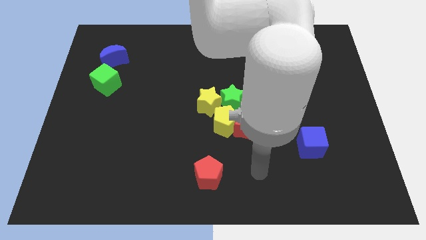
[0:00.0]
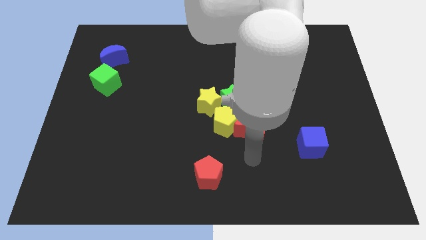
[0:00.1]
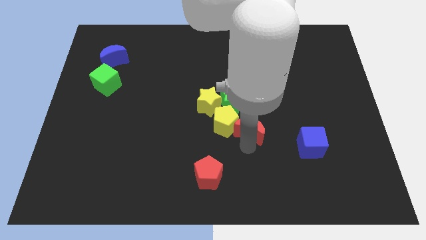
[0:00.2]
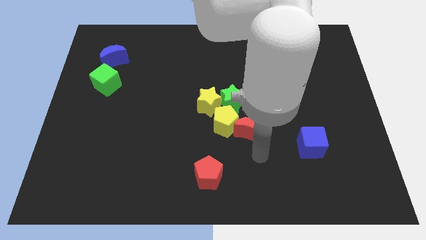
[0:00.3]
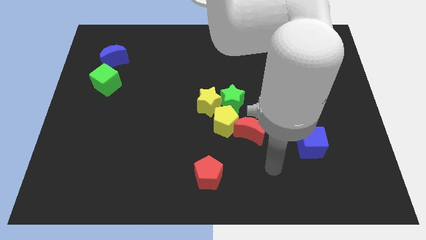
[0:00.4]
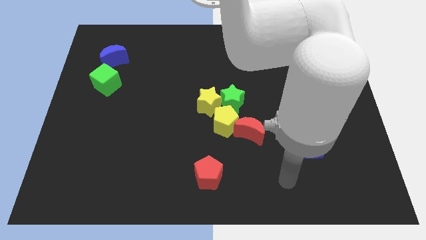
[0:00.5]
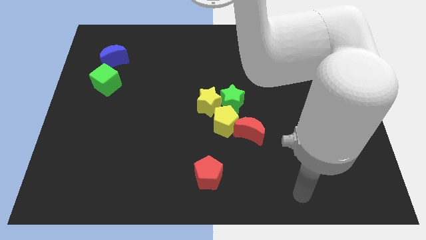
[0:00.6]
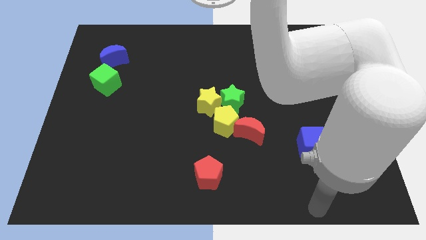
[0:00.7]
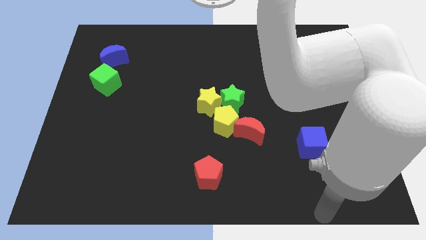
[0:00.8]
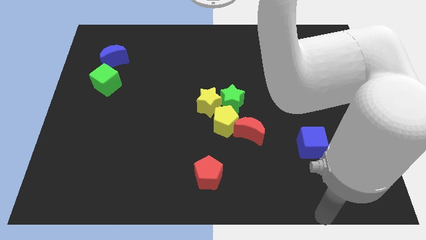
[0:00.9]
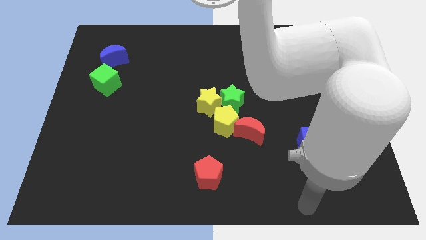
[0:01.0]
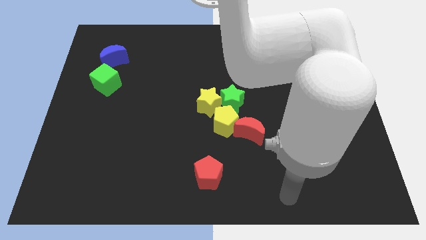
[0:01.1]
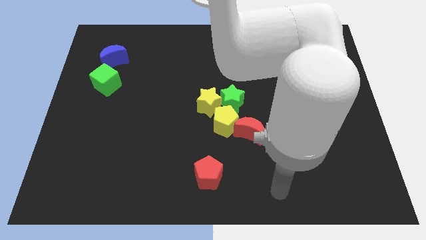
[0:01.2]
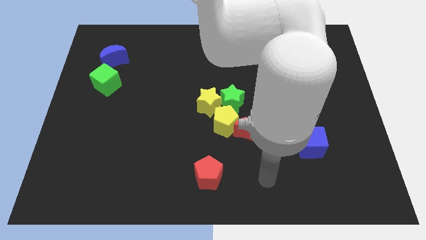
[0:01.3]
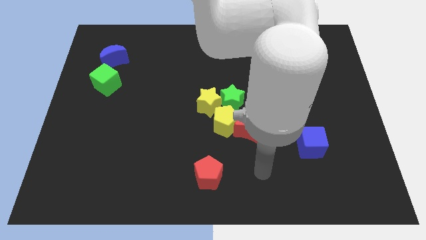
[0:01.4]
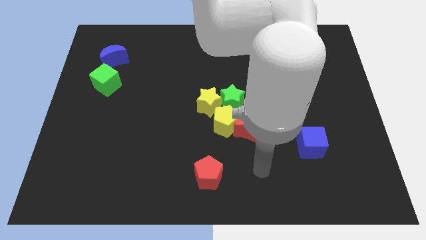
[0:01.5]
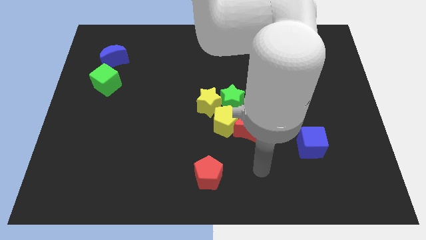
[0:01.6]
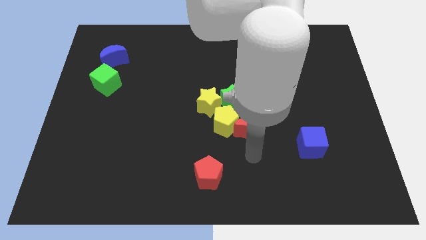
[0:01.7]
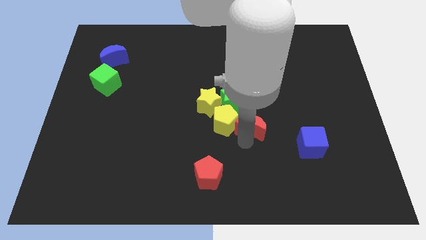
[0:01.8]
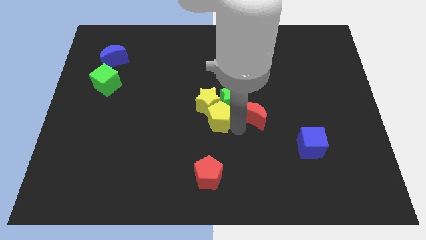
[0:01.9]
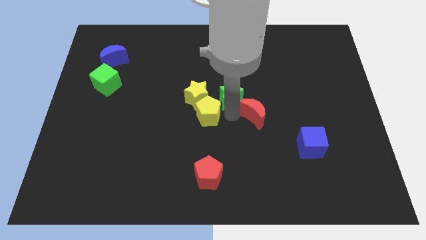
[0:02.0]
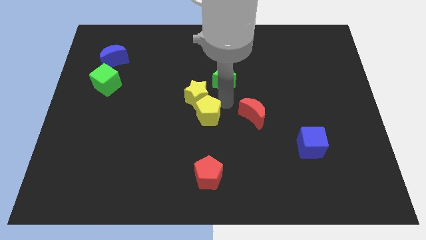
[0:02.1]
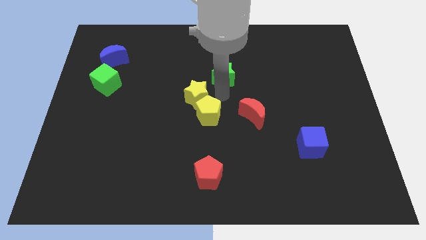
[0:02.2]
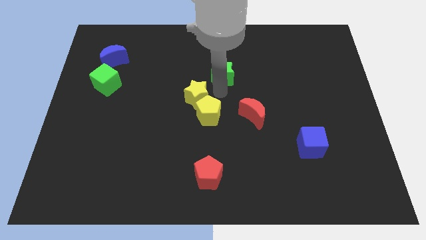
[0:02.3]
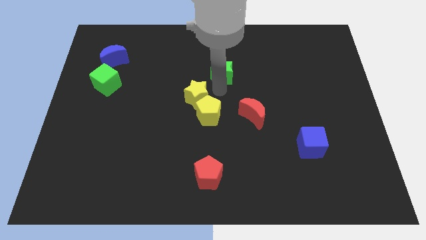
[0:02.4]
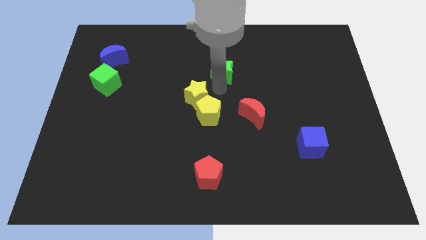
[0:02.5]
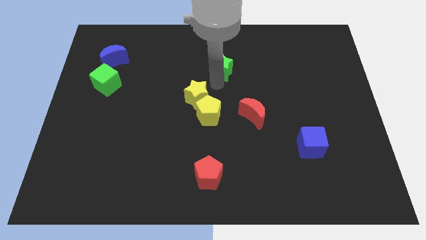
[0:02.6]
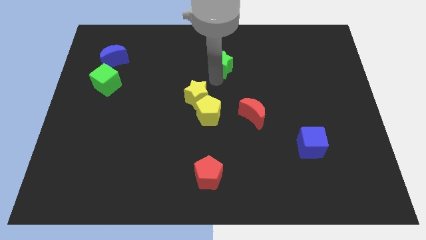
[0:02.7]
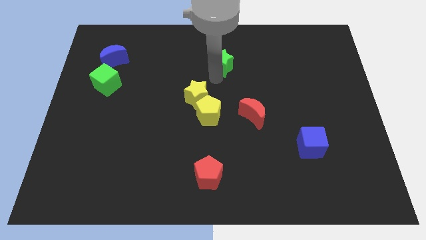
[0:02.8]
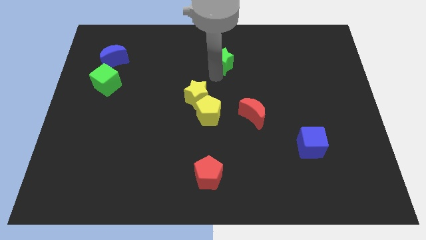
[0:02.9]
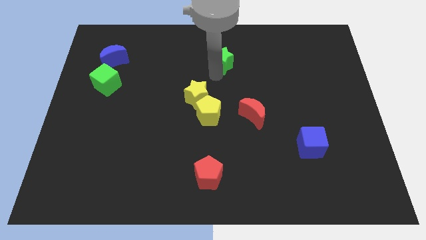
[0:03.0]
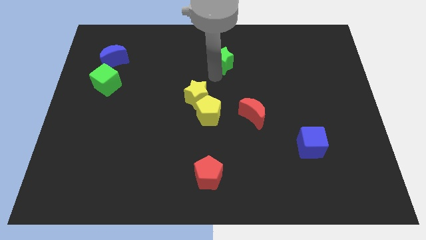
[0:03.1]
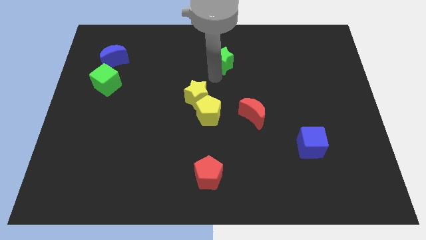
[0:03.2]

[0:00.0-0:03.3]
push the green star to the top center of the board

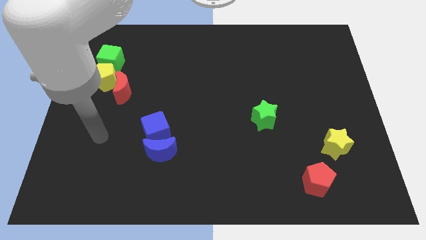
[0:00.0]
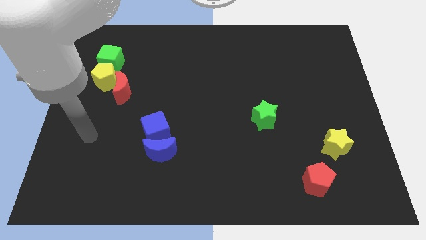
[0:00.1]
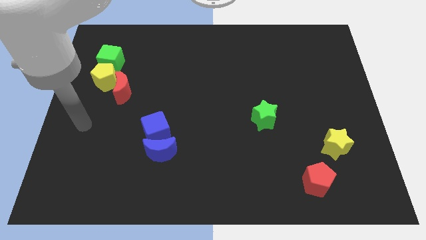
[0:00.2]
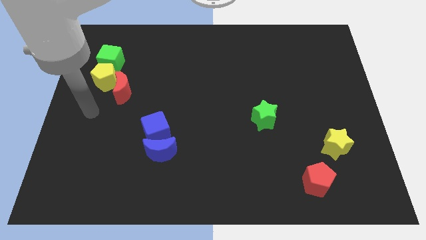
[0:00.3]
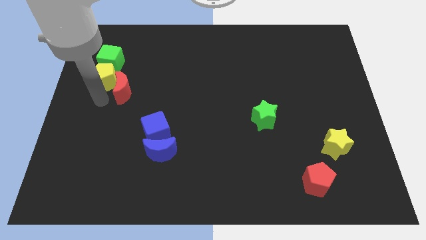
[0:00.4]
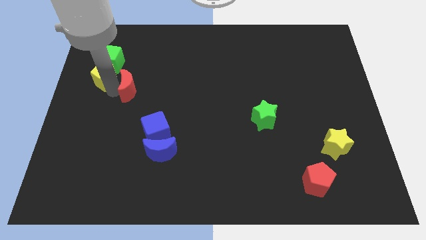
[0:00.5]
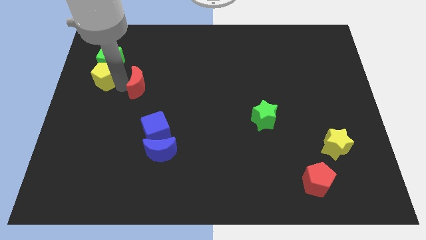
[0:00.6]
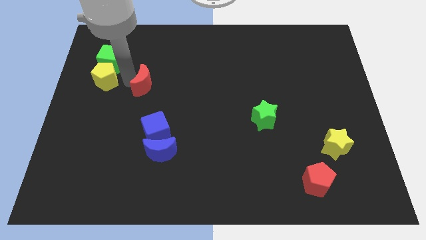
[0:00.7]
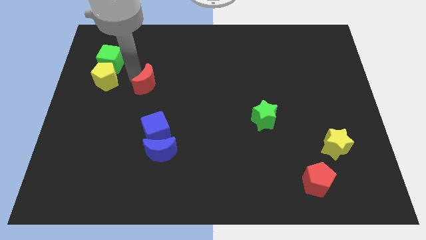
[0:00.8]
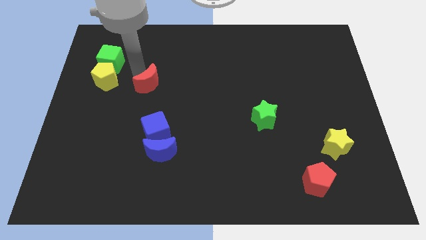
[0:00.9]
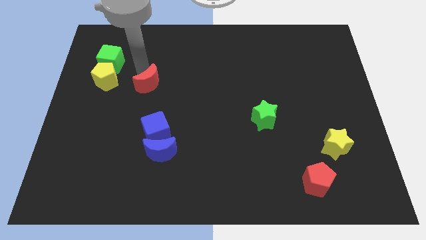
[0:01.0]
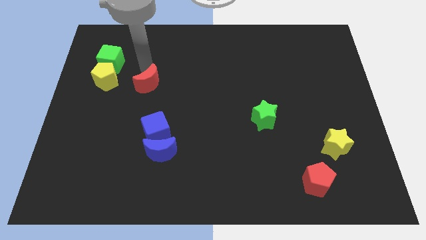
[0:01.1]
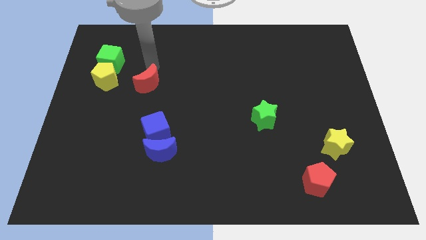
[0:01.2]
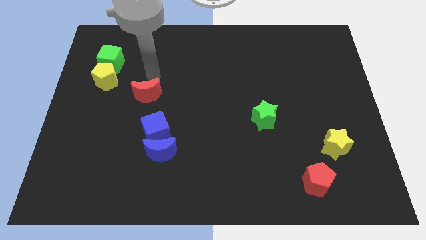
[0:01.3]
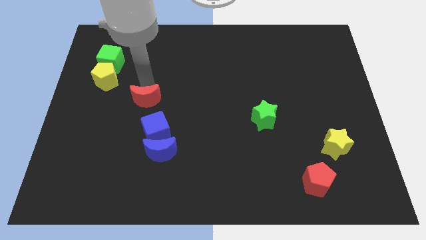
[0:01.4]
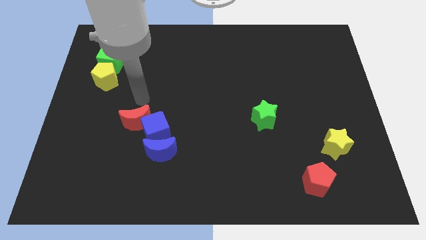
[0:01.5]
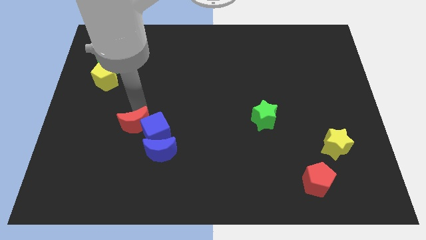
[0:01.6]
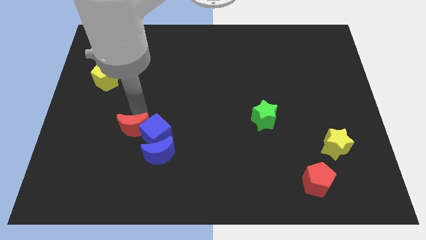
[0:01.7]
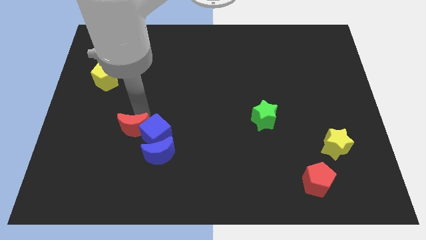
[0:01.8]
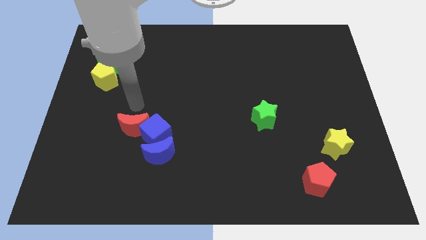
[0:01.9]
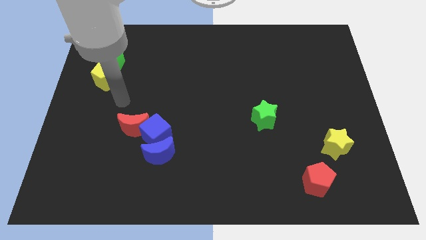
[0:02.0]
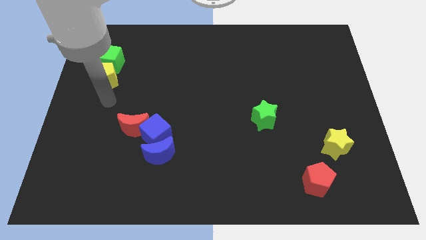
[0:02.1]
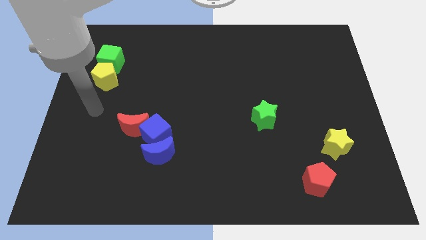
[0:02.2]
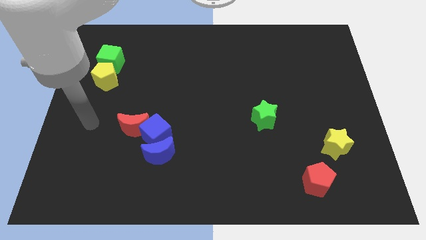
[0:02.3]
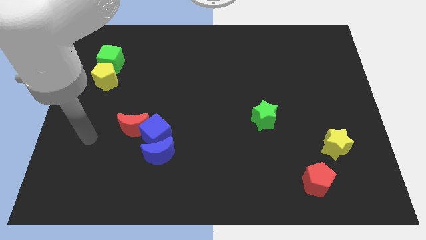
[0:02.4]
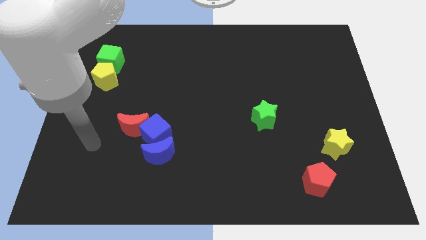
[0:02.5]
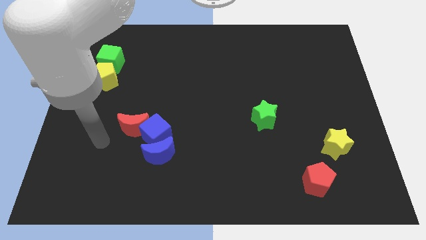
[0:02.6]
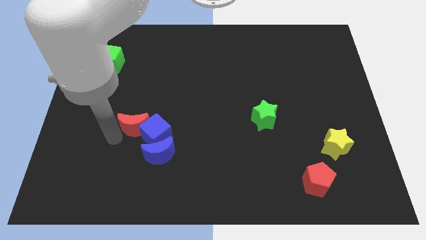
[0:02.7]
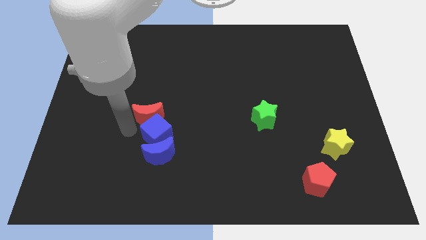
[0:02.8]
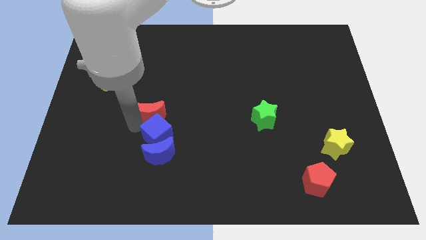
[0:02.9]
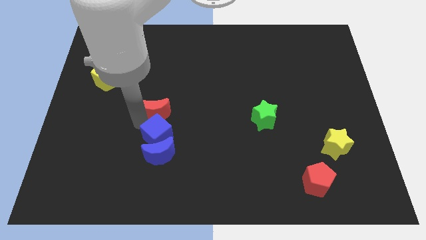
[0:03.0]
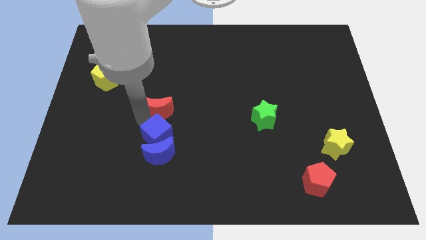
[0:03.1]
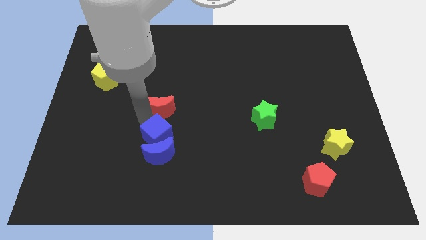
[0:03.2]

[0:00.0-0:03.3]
move the red crescent into the blue cube

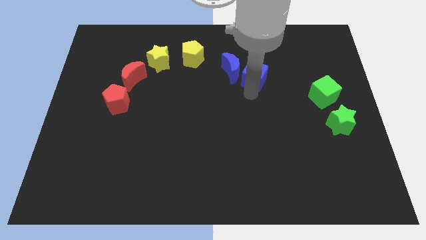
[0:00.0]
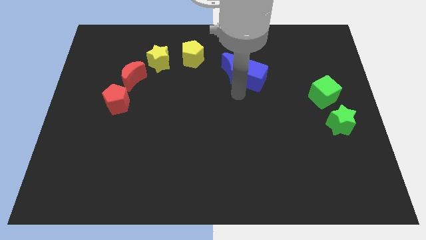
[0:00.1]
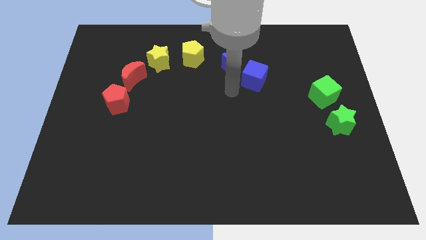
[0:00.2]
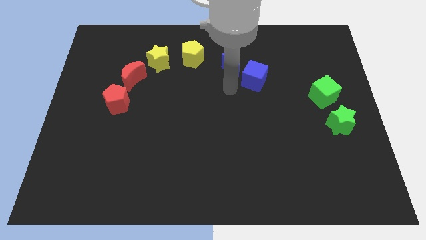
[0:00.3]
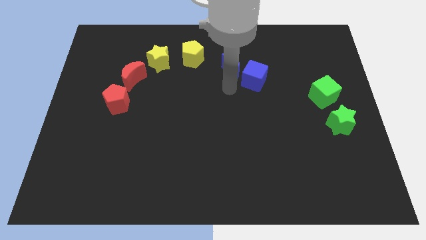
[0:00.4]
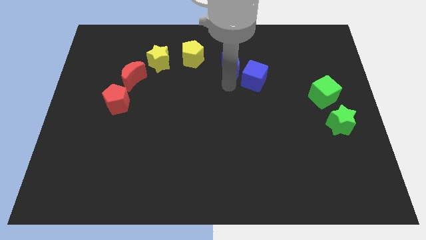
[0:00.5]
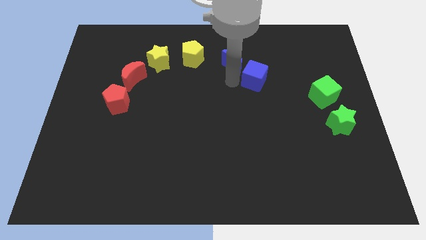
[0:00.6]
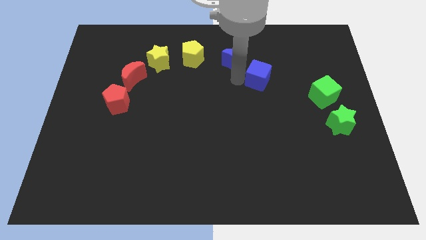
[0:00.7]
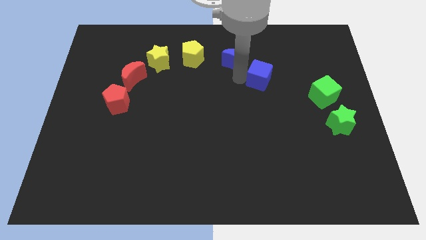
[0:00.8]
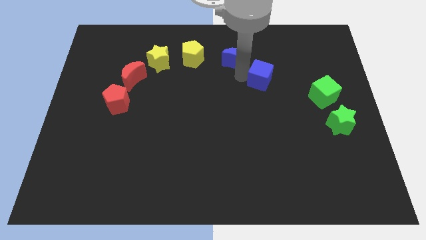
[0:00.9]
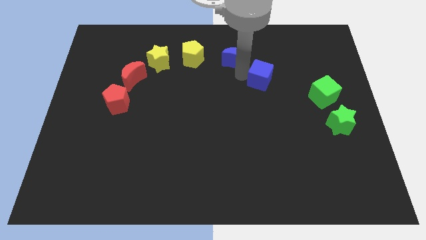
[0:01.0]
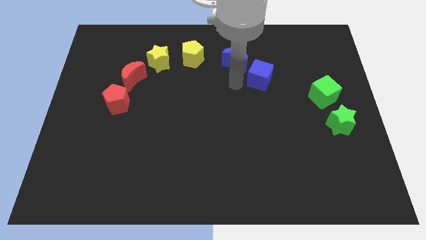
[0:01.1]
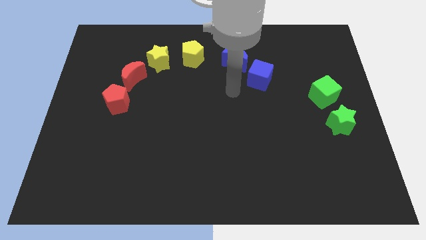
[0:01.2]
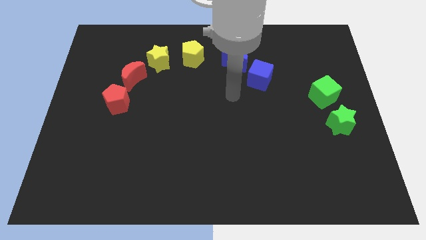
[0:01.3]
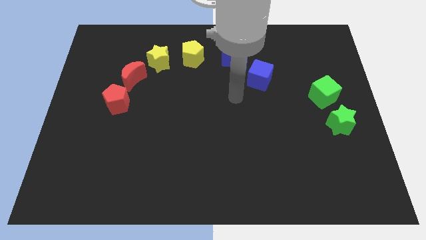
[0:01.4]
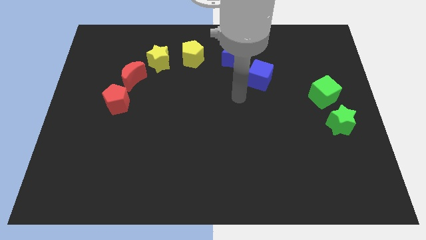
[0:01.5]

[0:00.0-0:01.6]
slightly push the blue crescent right to the yellow pentagon

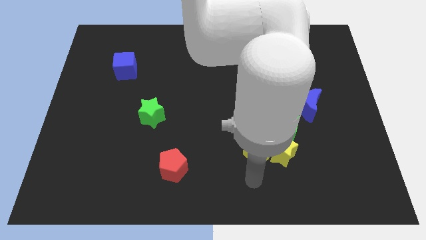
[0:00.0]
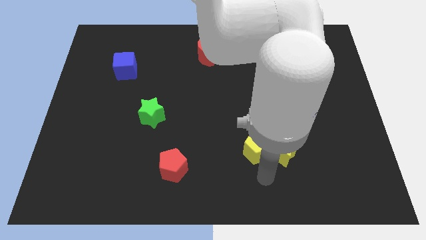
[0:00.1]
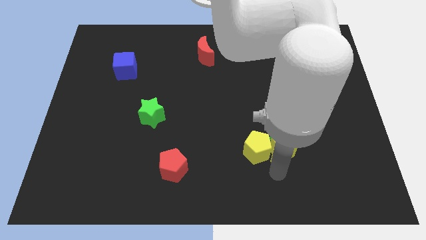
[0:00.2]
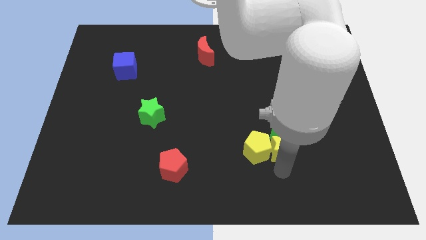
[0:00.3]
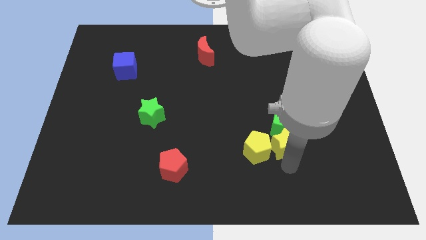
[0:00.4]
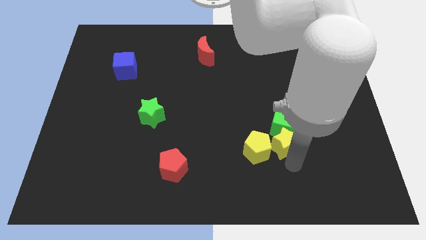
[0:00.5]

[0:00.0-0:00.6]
push the yellow star into the green cube

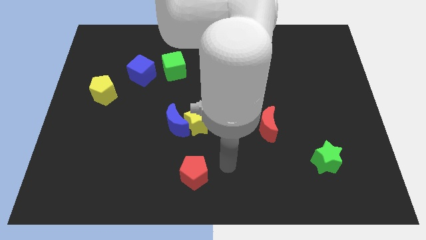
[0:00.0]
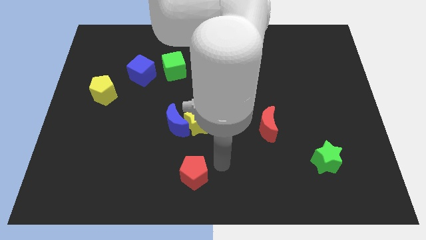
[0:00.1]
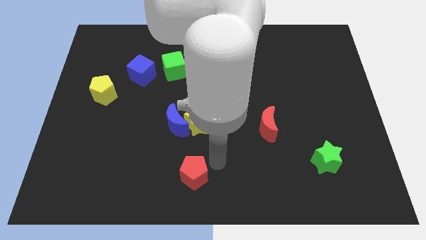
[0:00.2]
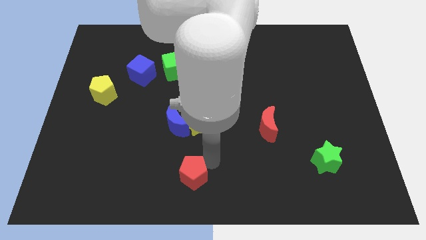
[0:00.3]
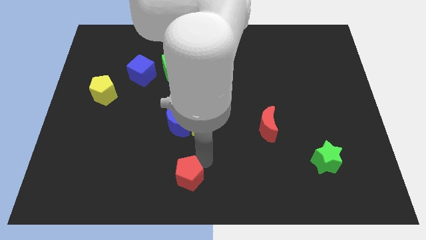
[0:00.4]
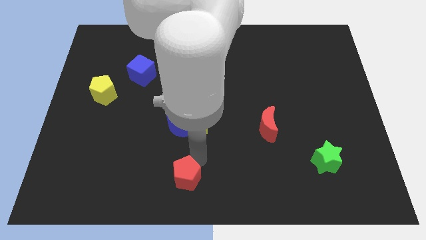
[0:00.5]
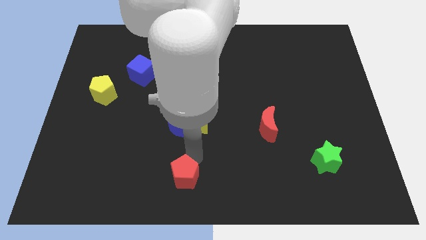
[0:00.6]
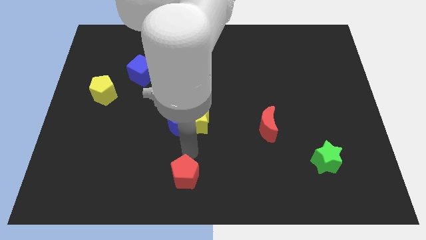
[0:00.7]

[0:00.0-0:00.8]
push the red pentagon towards left
